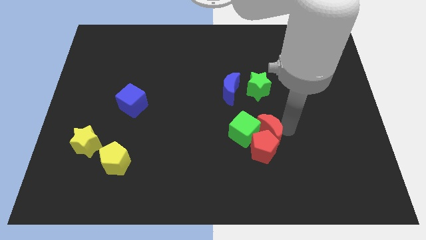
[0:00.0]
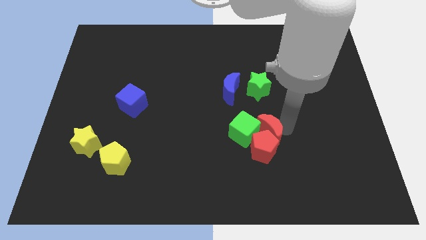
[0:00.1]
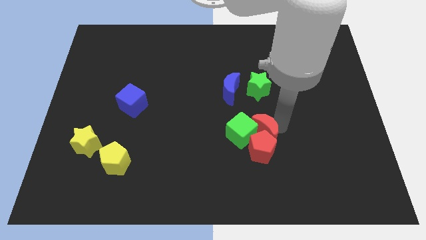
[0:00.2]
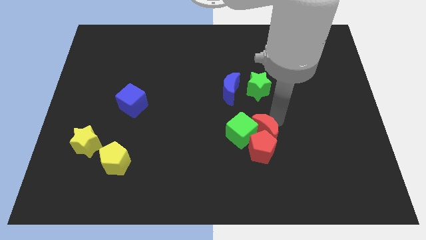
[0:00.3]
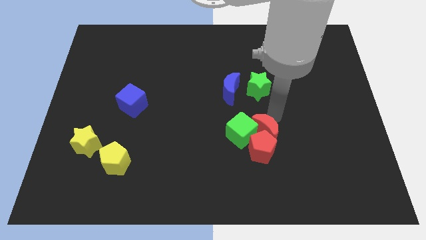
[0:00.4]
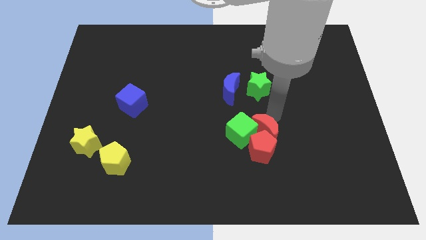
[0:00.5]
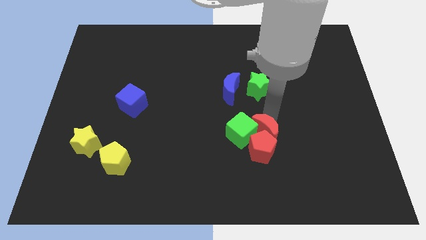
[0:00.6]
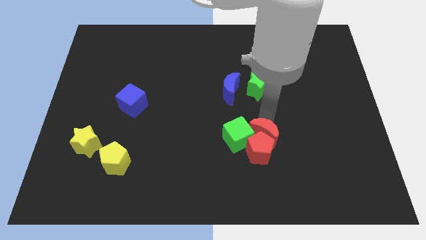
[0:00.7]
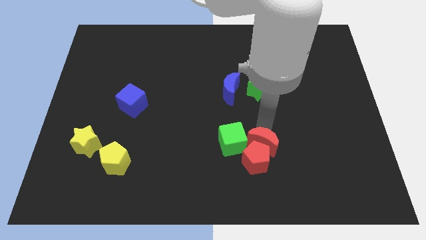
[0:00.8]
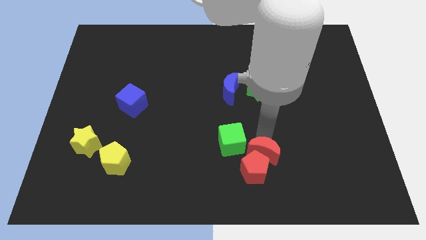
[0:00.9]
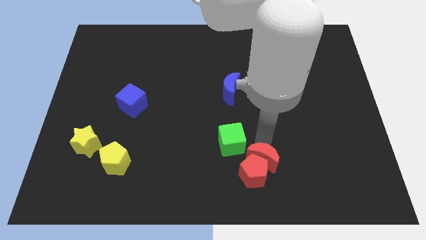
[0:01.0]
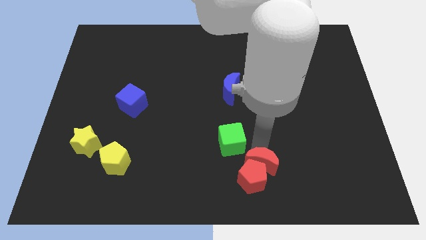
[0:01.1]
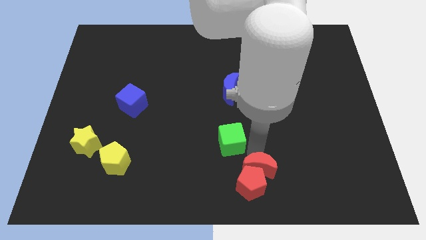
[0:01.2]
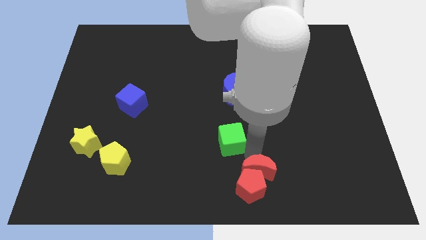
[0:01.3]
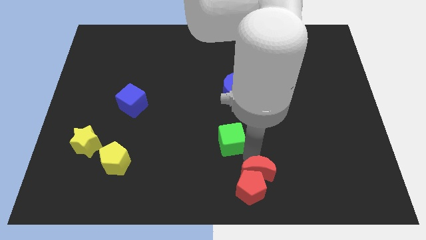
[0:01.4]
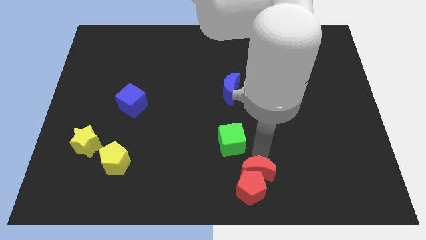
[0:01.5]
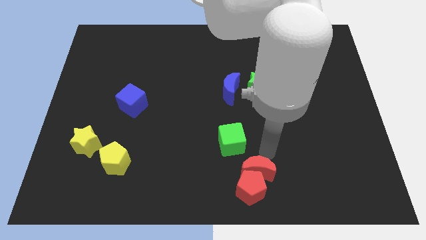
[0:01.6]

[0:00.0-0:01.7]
move red moon along with red pentagon towards bottom

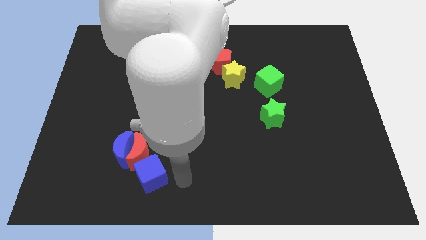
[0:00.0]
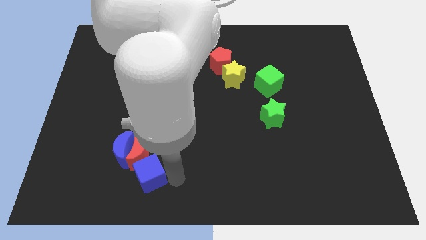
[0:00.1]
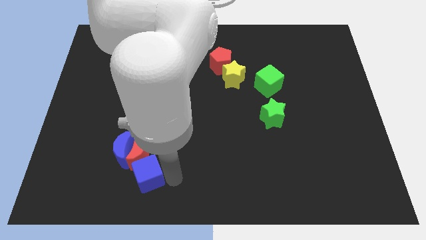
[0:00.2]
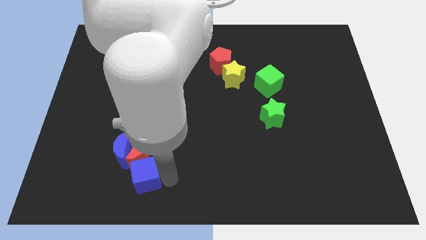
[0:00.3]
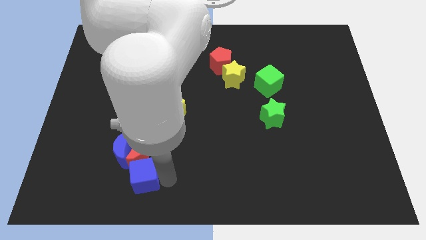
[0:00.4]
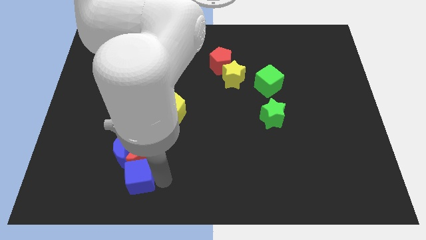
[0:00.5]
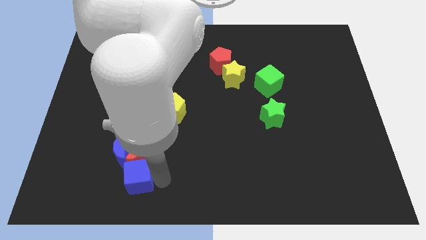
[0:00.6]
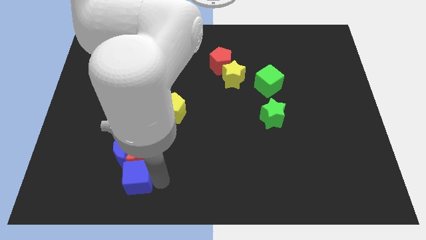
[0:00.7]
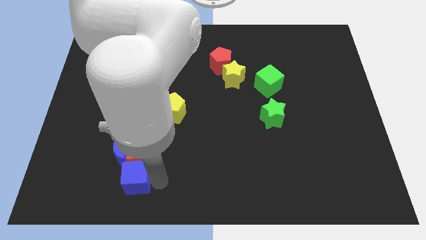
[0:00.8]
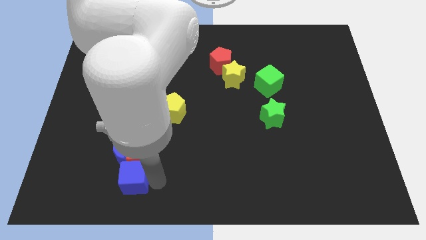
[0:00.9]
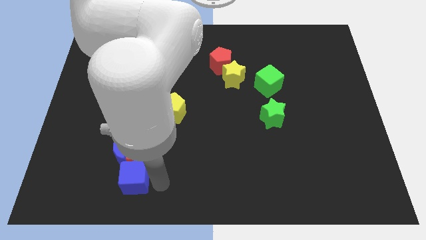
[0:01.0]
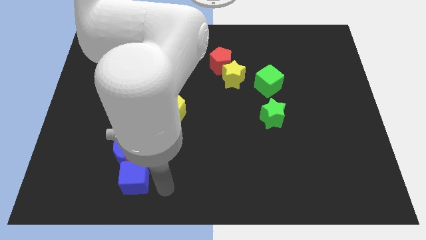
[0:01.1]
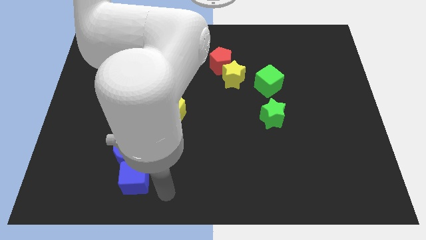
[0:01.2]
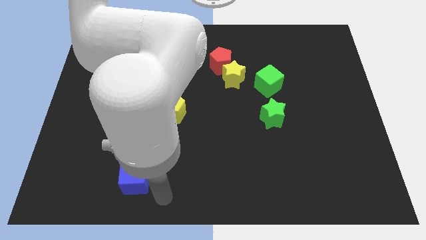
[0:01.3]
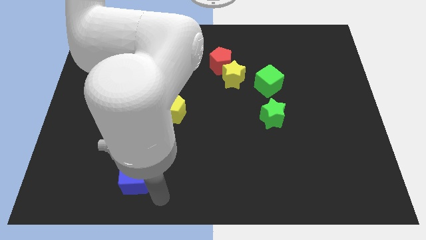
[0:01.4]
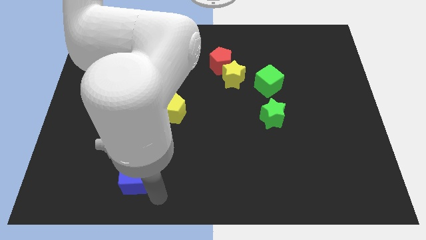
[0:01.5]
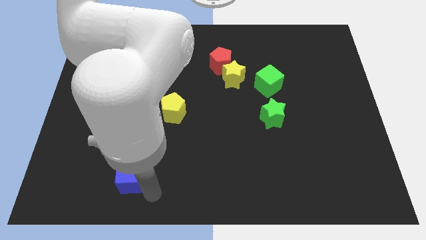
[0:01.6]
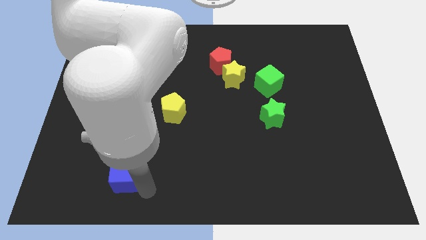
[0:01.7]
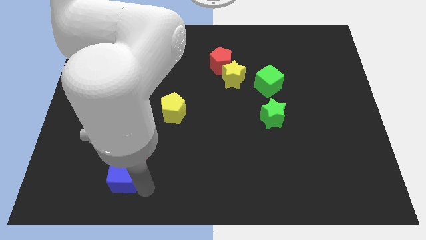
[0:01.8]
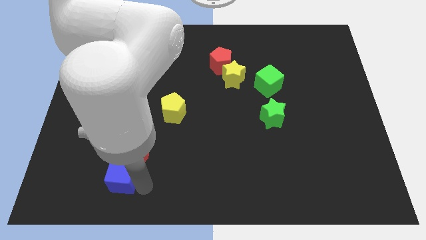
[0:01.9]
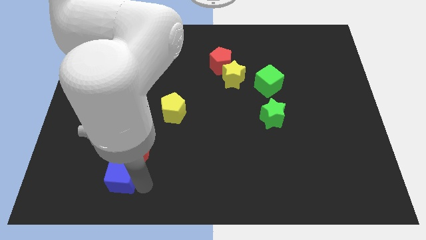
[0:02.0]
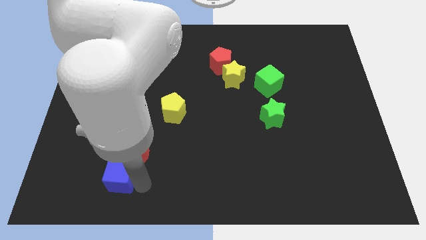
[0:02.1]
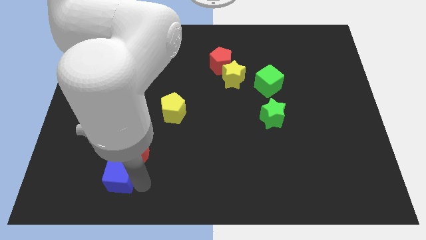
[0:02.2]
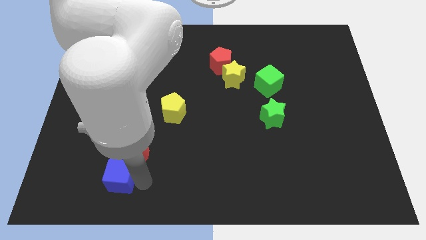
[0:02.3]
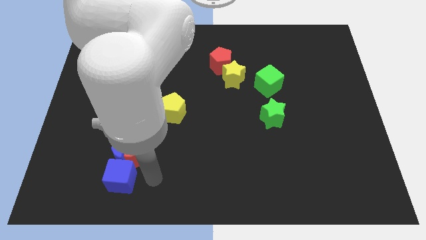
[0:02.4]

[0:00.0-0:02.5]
move the blue cube to the bottom of the blue crescent

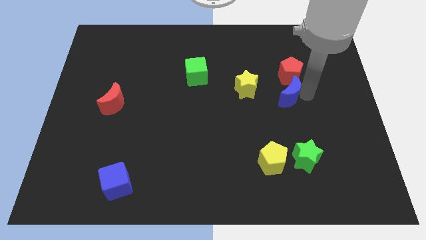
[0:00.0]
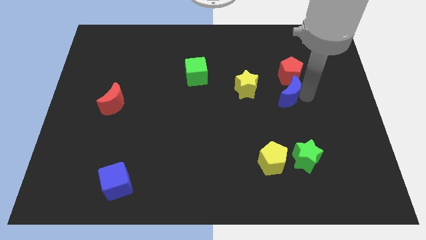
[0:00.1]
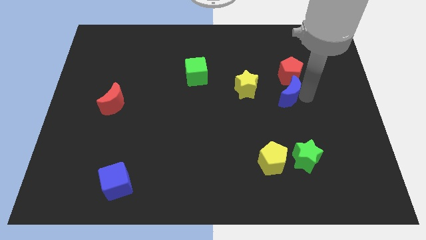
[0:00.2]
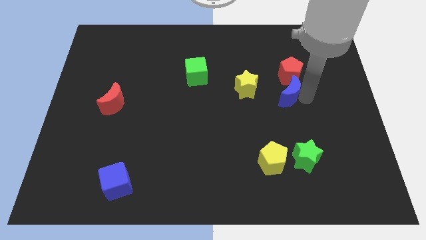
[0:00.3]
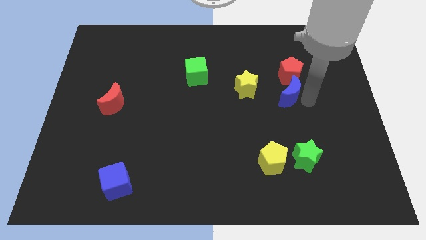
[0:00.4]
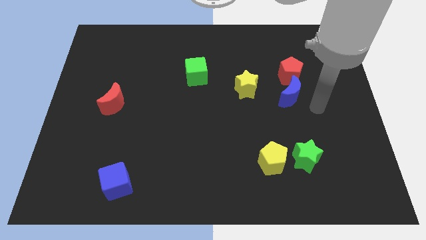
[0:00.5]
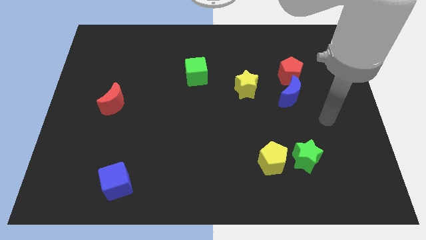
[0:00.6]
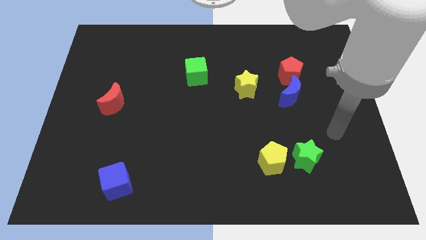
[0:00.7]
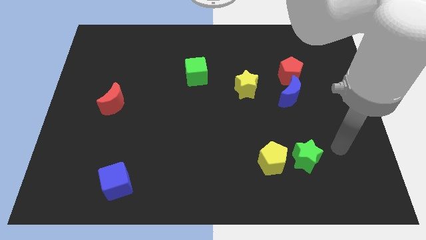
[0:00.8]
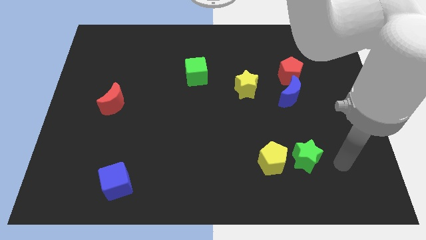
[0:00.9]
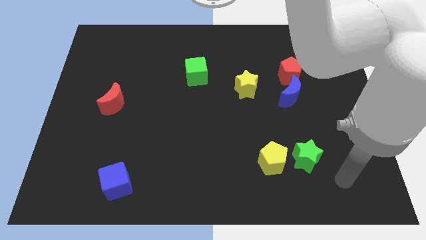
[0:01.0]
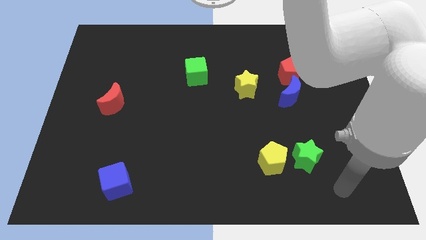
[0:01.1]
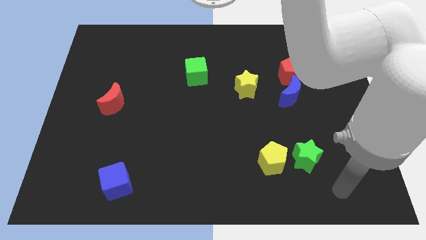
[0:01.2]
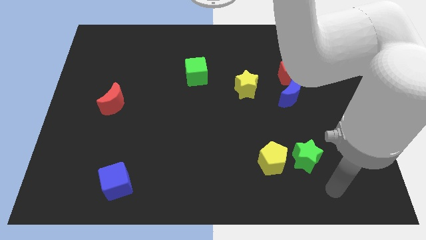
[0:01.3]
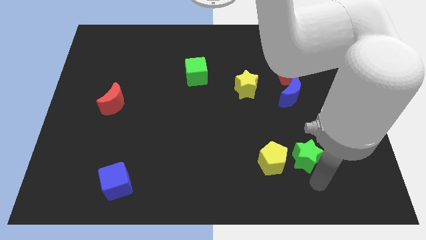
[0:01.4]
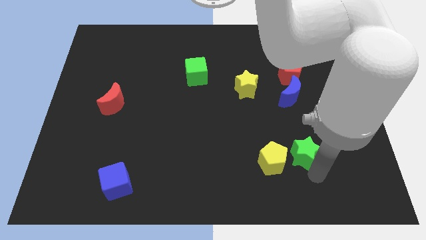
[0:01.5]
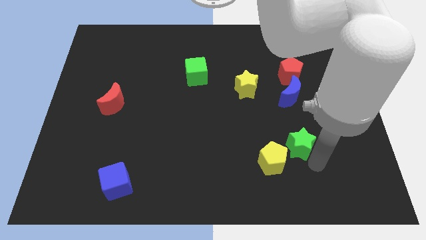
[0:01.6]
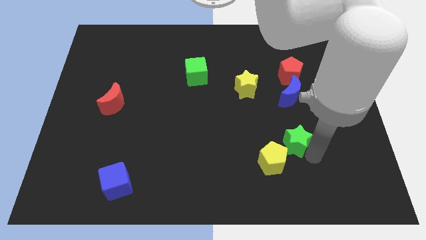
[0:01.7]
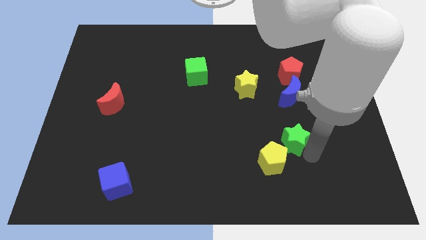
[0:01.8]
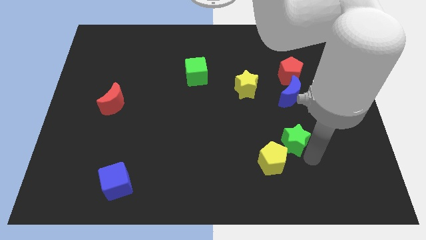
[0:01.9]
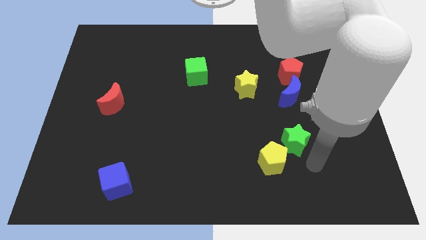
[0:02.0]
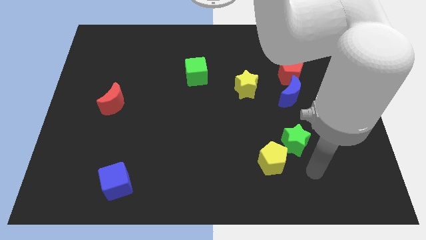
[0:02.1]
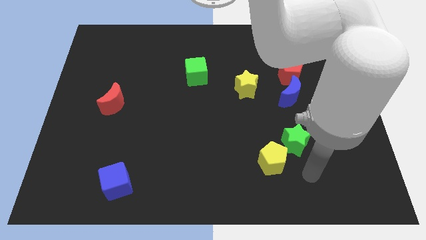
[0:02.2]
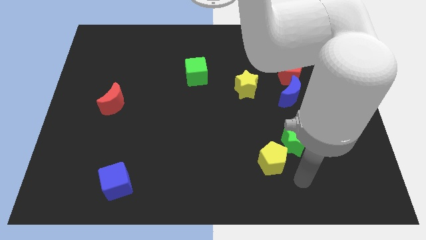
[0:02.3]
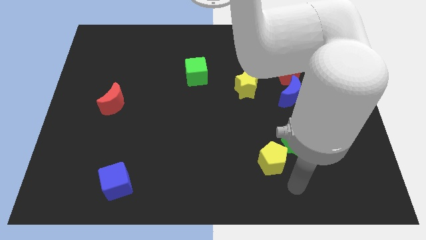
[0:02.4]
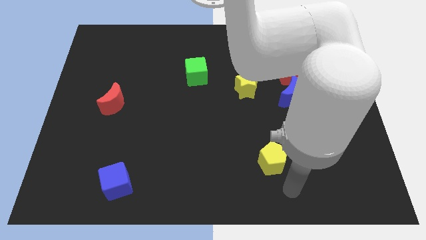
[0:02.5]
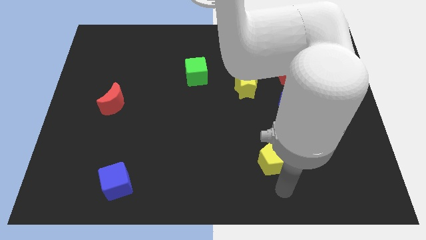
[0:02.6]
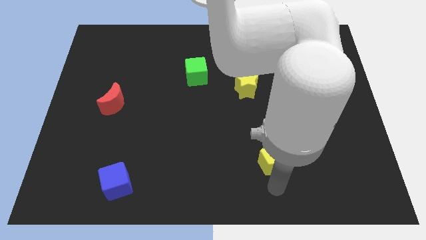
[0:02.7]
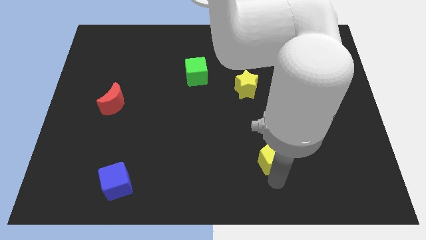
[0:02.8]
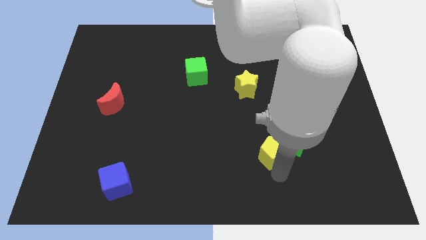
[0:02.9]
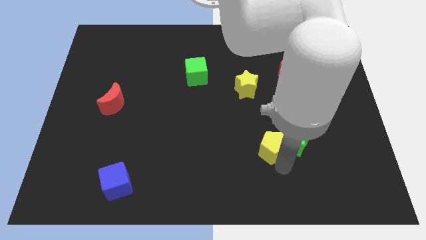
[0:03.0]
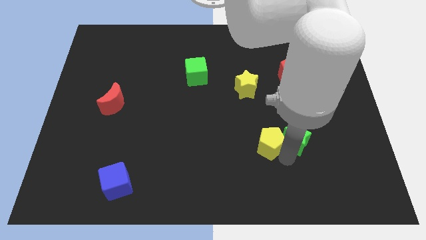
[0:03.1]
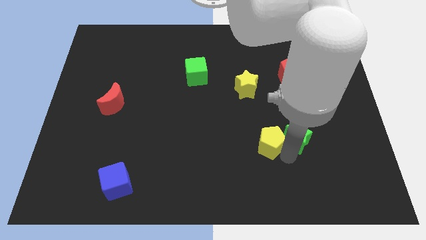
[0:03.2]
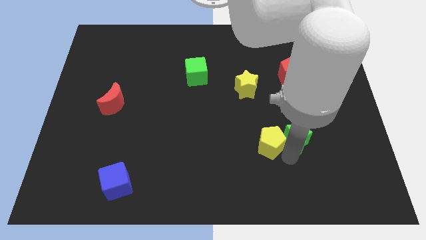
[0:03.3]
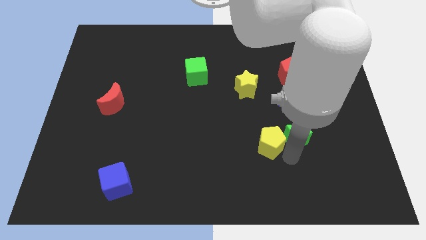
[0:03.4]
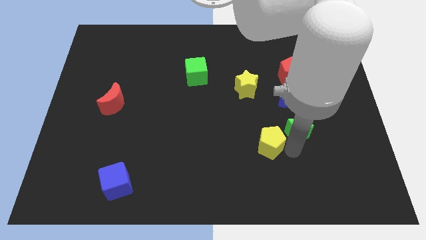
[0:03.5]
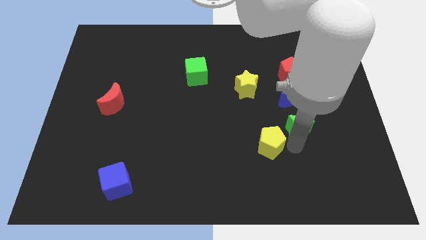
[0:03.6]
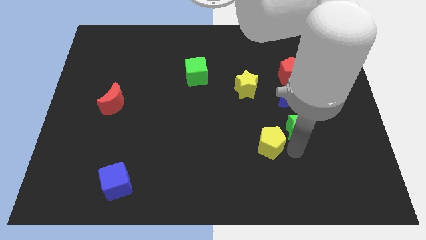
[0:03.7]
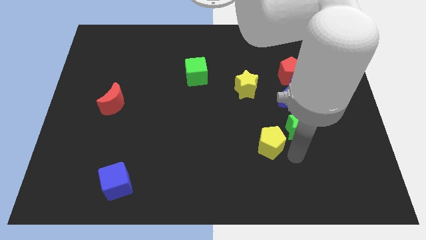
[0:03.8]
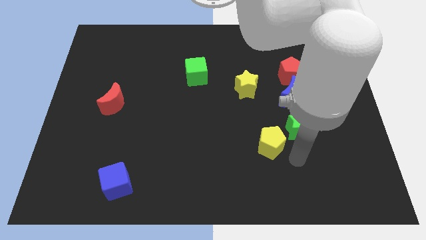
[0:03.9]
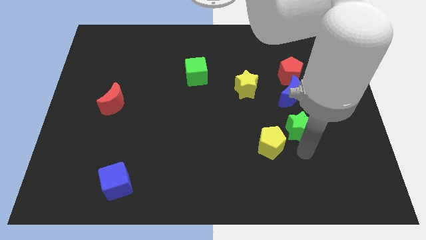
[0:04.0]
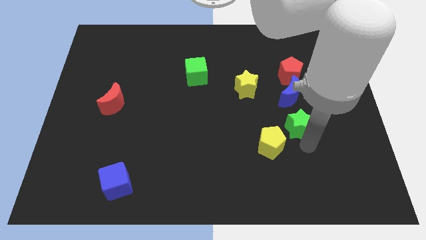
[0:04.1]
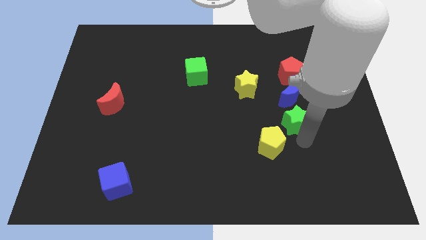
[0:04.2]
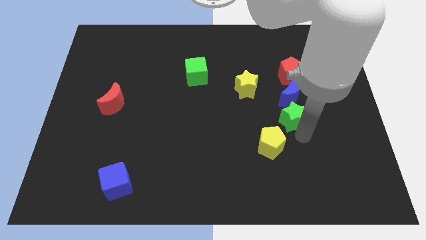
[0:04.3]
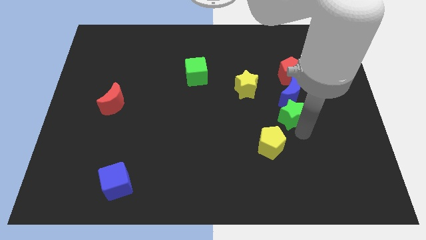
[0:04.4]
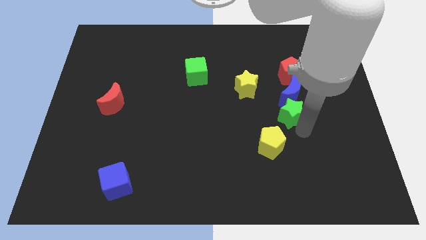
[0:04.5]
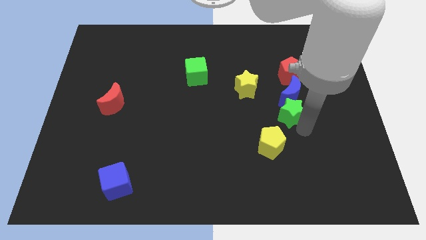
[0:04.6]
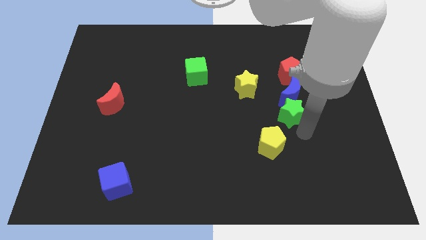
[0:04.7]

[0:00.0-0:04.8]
push green star towards half blue moon

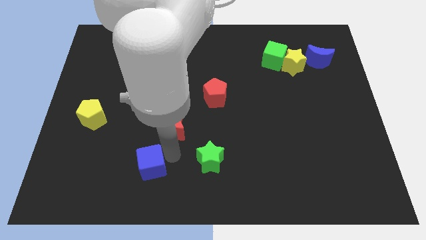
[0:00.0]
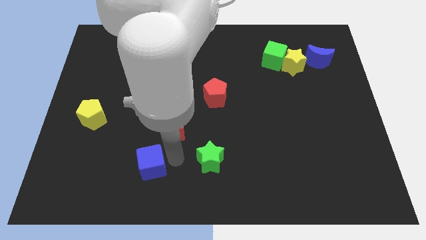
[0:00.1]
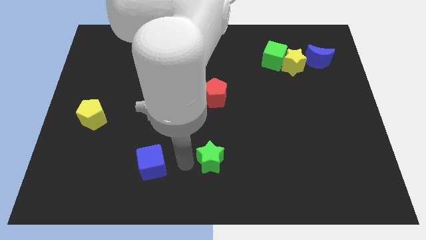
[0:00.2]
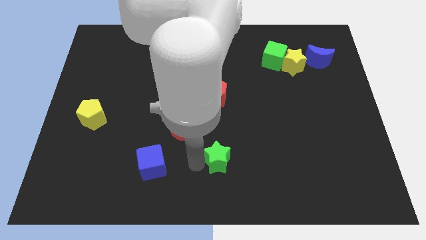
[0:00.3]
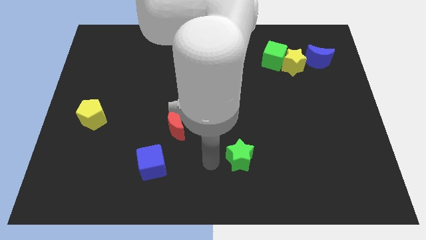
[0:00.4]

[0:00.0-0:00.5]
move green star slightly right
